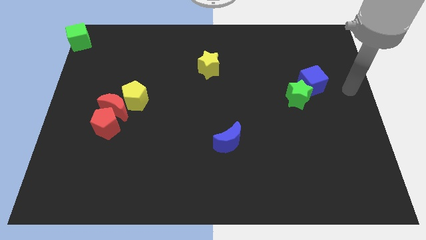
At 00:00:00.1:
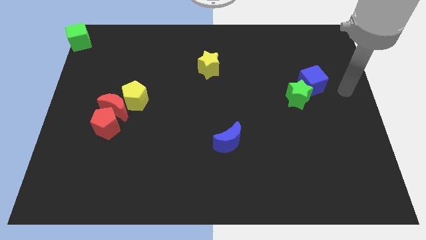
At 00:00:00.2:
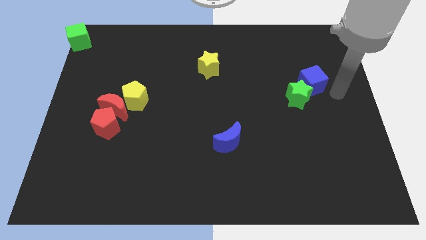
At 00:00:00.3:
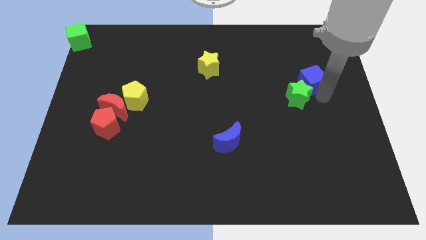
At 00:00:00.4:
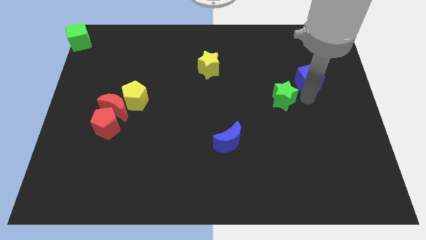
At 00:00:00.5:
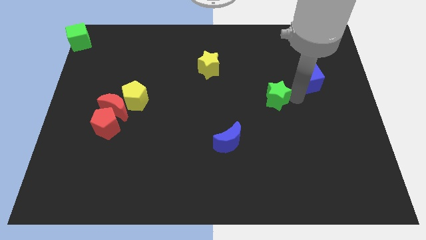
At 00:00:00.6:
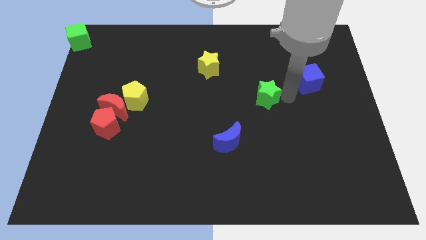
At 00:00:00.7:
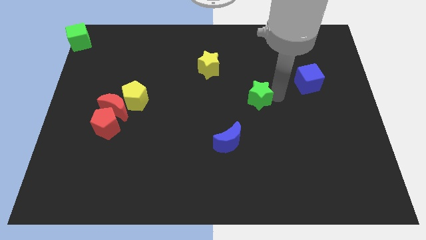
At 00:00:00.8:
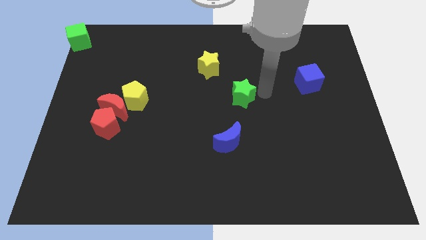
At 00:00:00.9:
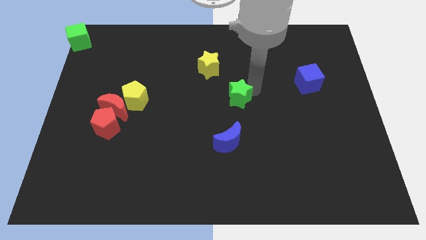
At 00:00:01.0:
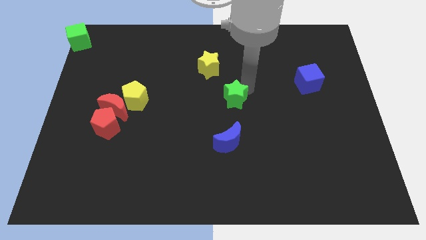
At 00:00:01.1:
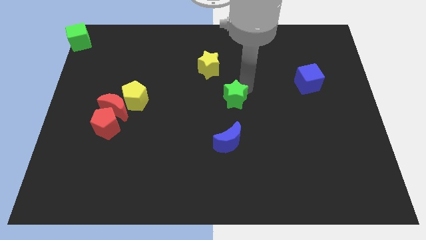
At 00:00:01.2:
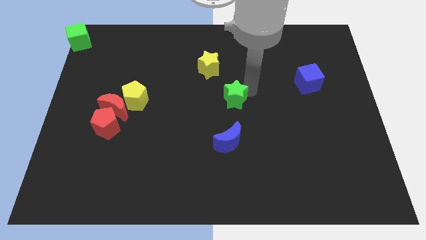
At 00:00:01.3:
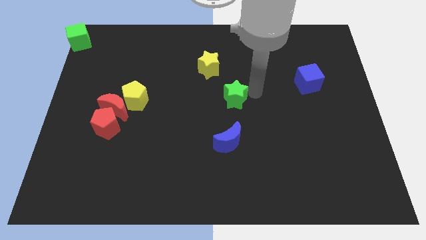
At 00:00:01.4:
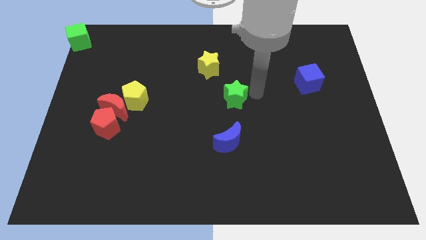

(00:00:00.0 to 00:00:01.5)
move the green star to the center of the board

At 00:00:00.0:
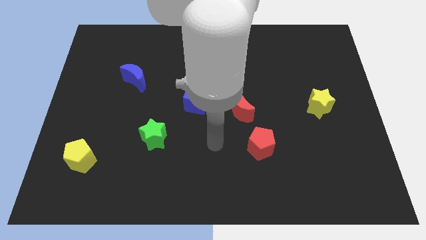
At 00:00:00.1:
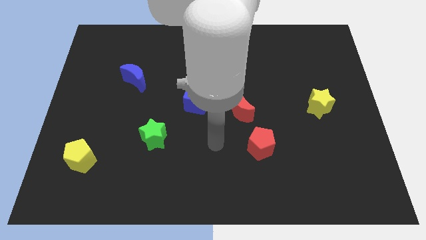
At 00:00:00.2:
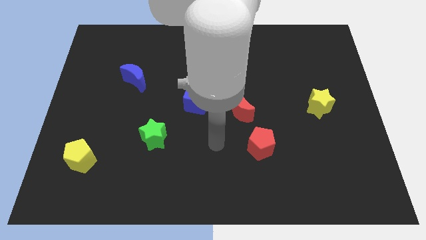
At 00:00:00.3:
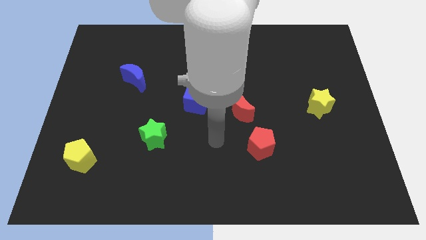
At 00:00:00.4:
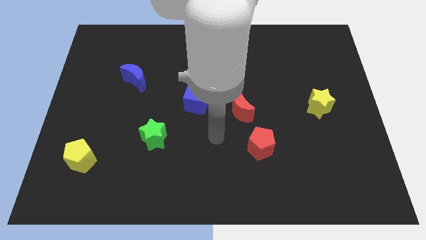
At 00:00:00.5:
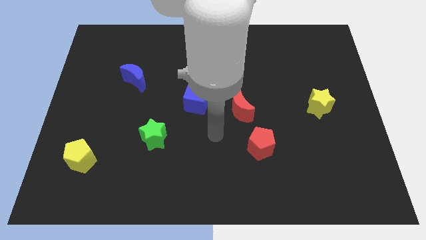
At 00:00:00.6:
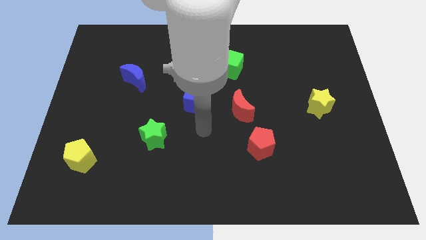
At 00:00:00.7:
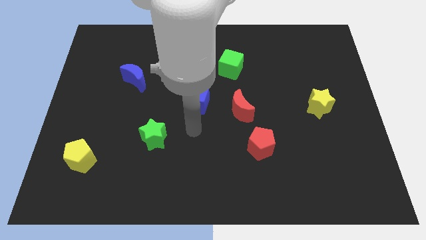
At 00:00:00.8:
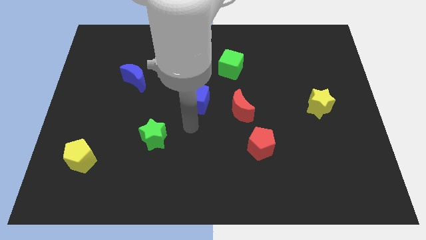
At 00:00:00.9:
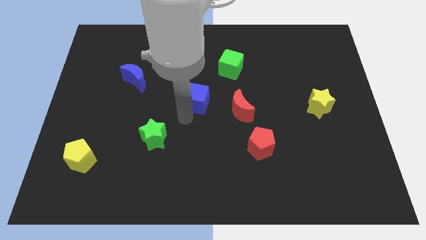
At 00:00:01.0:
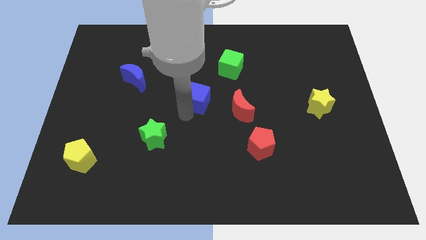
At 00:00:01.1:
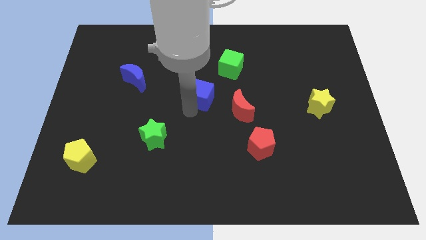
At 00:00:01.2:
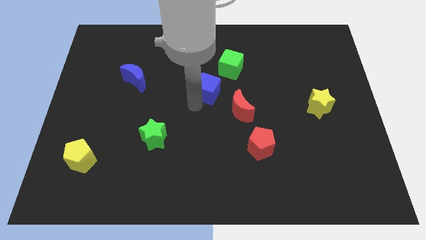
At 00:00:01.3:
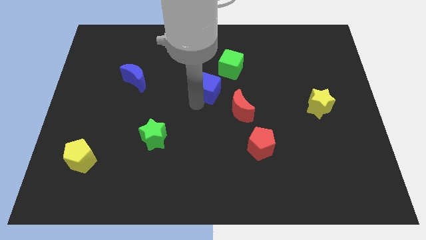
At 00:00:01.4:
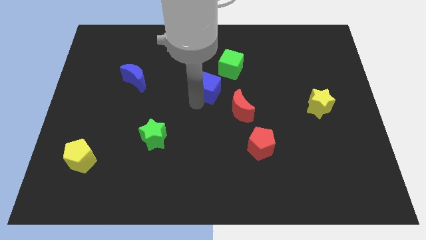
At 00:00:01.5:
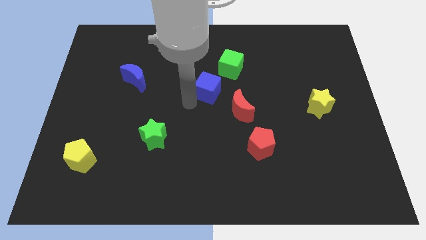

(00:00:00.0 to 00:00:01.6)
push the blue cube slightly towards the top

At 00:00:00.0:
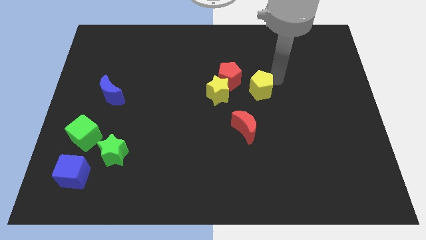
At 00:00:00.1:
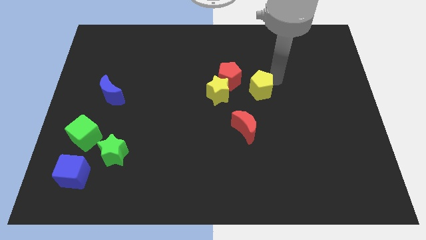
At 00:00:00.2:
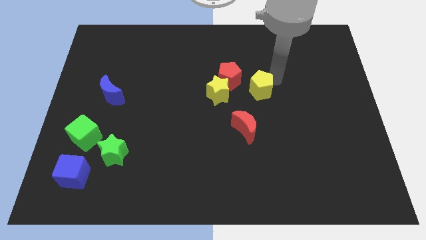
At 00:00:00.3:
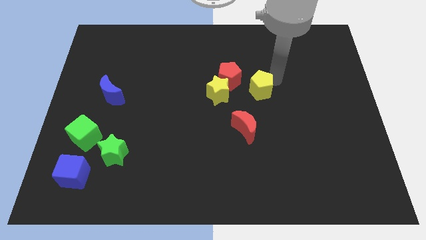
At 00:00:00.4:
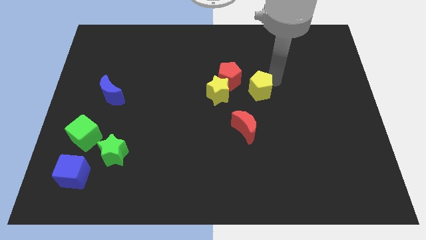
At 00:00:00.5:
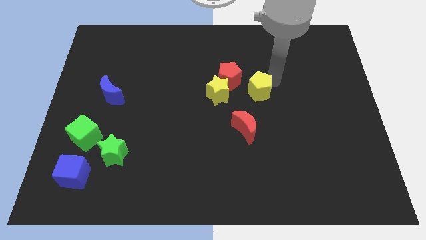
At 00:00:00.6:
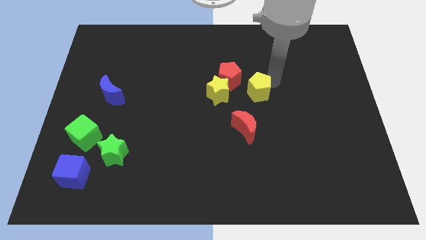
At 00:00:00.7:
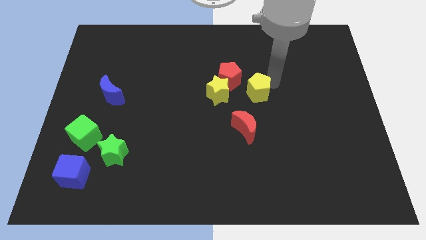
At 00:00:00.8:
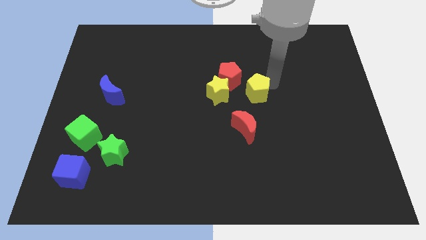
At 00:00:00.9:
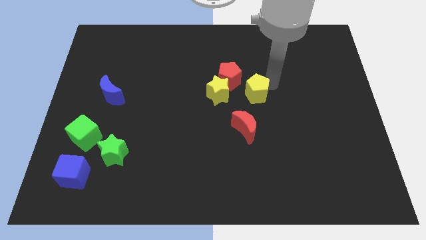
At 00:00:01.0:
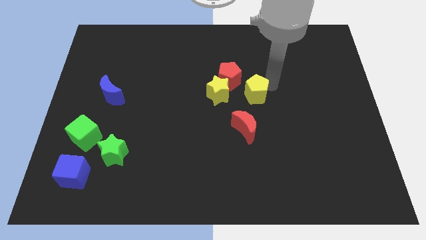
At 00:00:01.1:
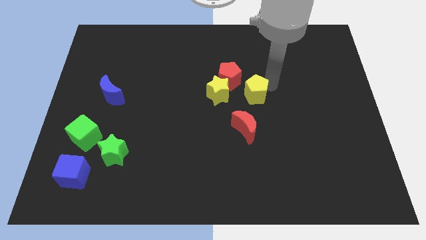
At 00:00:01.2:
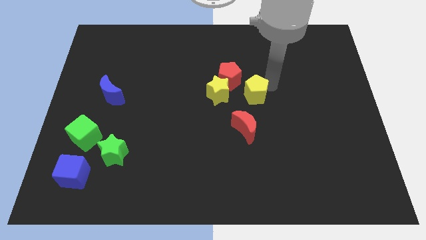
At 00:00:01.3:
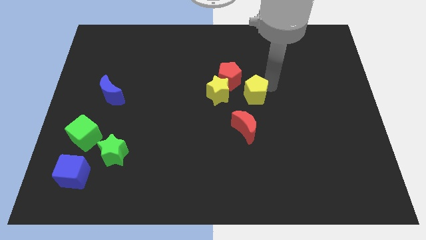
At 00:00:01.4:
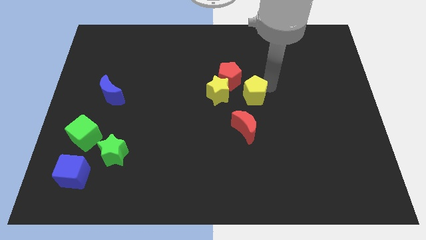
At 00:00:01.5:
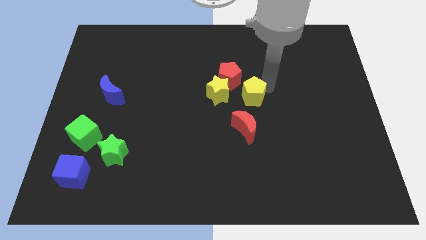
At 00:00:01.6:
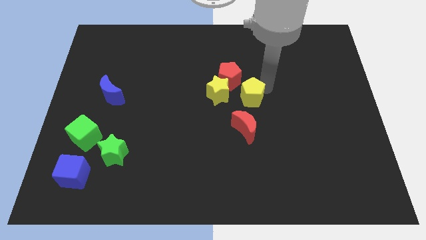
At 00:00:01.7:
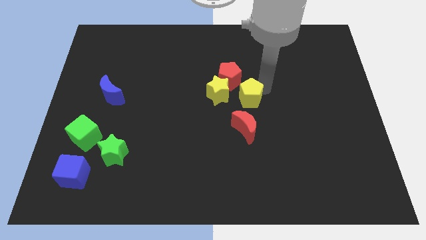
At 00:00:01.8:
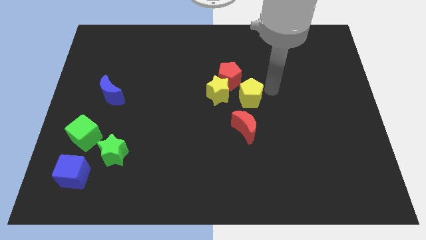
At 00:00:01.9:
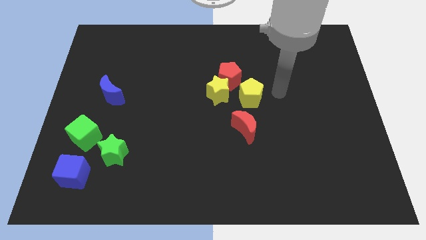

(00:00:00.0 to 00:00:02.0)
move the yellow pentagon to the top of the red crescent

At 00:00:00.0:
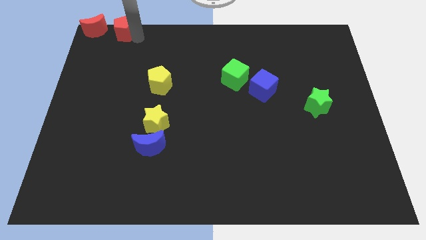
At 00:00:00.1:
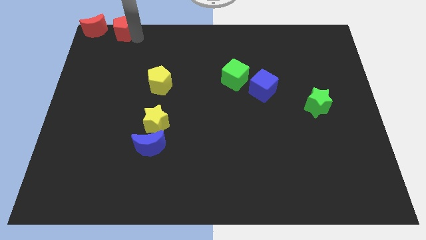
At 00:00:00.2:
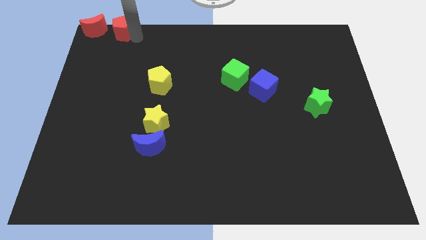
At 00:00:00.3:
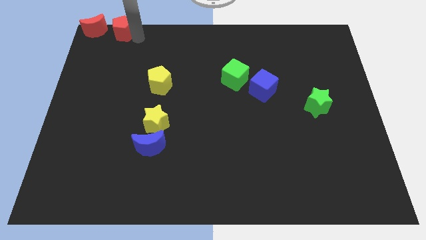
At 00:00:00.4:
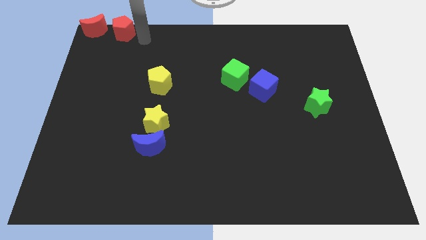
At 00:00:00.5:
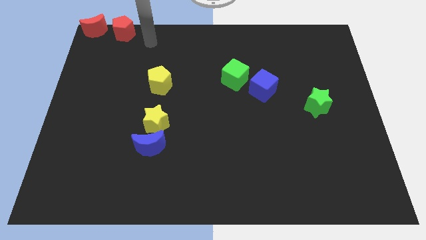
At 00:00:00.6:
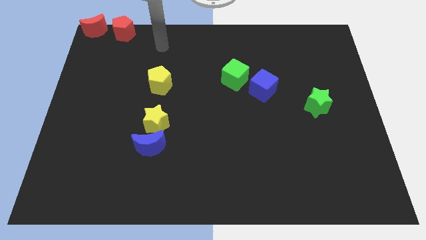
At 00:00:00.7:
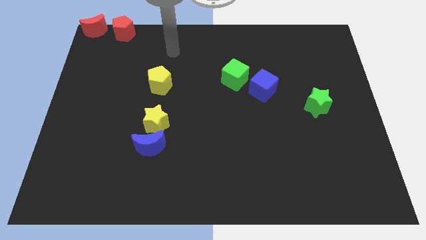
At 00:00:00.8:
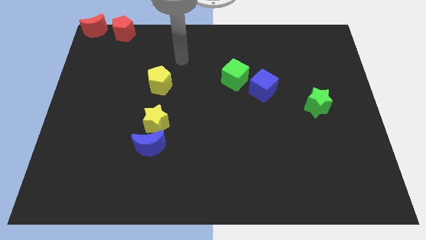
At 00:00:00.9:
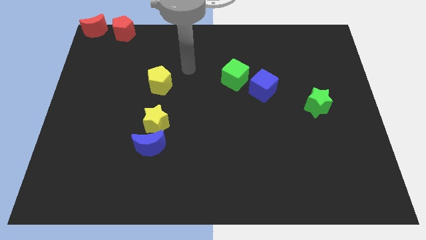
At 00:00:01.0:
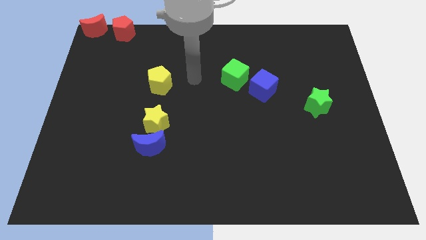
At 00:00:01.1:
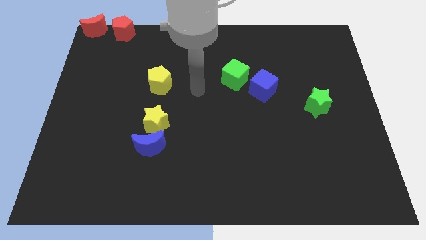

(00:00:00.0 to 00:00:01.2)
put the arm in between the yellow pentagon and green cube

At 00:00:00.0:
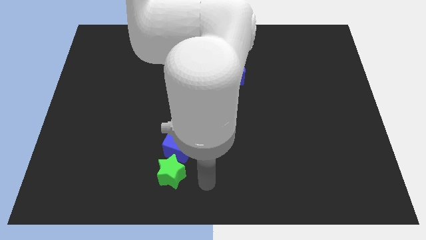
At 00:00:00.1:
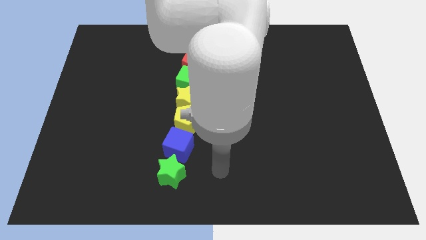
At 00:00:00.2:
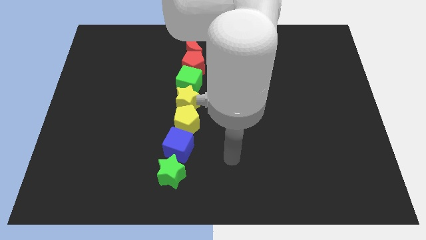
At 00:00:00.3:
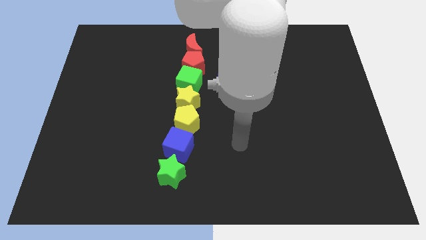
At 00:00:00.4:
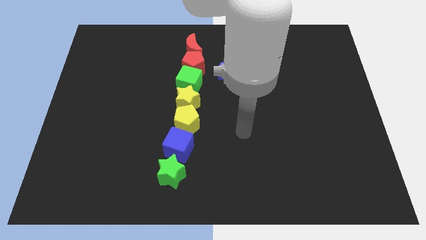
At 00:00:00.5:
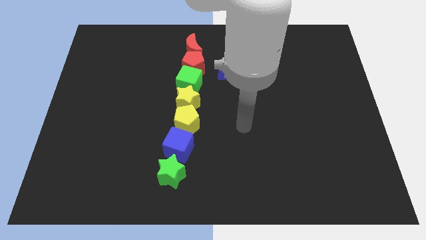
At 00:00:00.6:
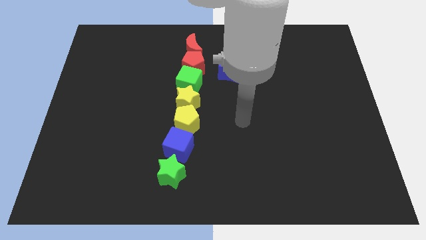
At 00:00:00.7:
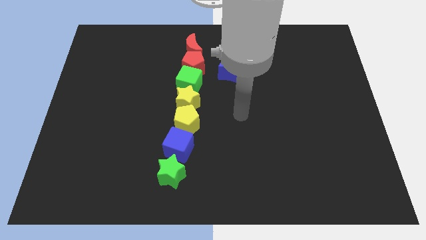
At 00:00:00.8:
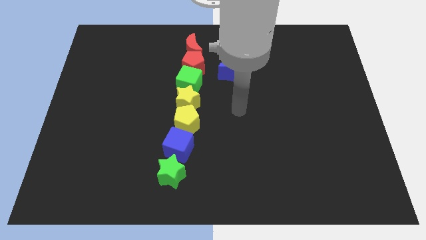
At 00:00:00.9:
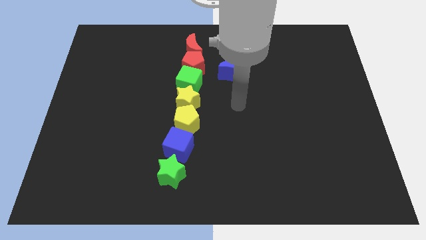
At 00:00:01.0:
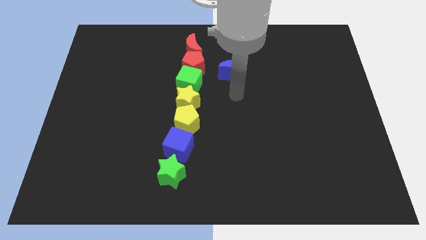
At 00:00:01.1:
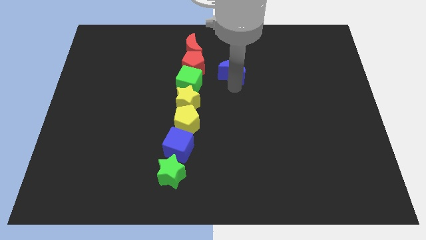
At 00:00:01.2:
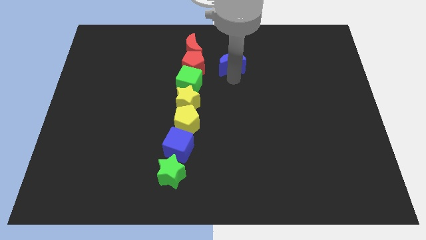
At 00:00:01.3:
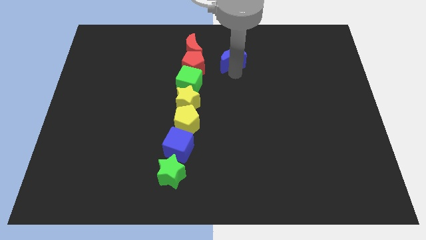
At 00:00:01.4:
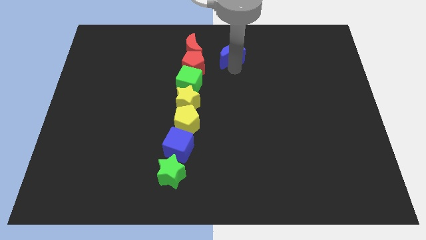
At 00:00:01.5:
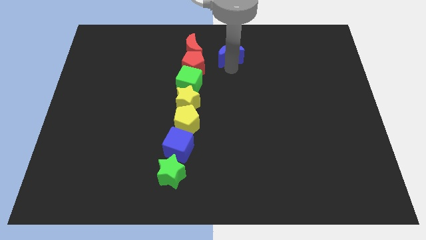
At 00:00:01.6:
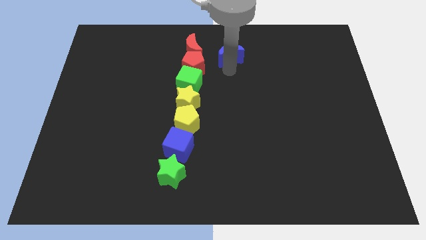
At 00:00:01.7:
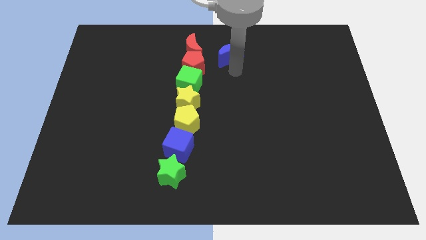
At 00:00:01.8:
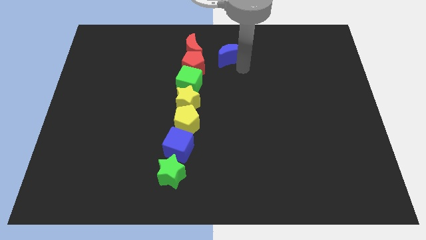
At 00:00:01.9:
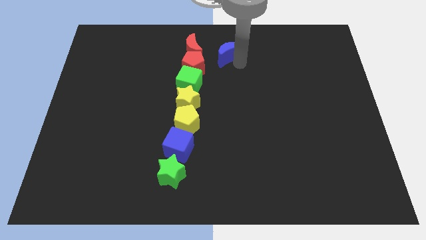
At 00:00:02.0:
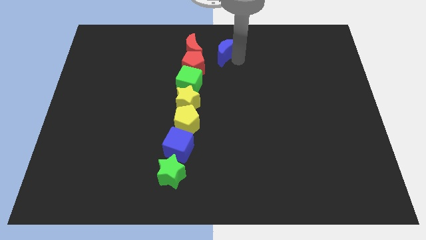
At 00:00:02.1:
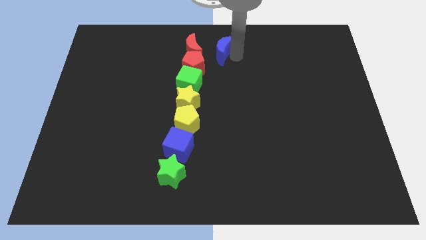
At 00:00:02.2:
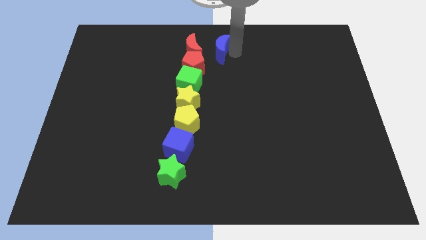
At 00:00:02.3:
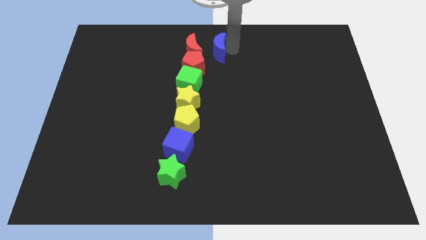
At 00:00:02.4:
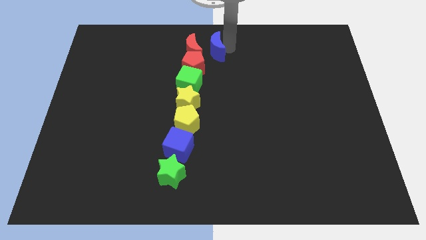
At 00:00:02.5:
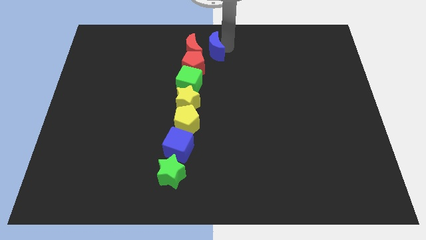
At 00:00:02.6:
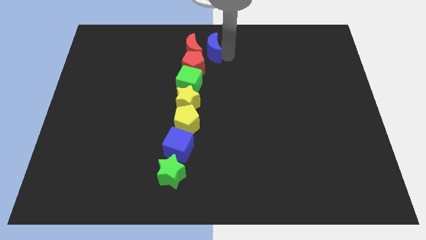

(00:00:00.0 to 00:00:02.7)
move the blue moon right to the red moon
